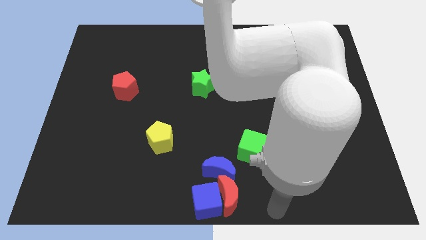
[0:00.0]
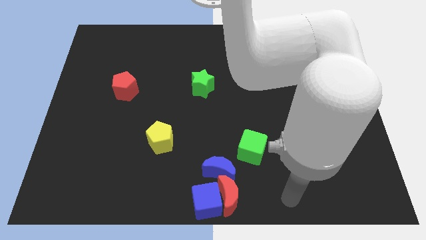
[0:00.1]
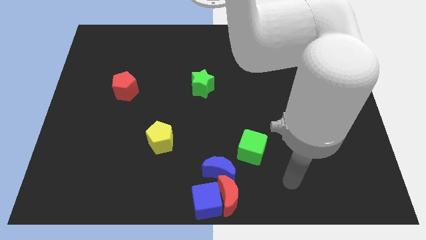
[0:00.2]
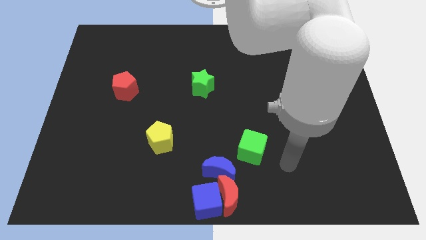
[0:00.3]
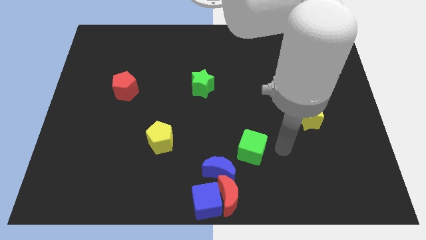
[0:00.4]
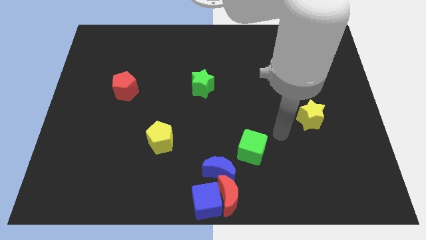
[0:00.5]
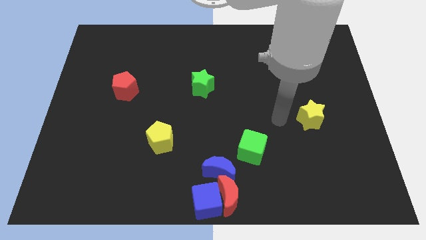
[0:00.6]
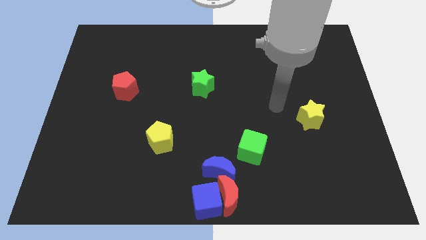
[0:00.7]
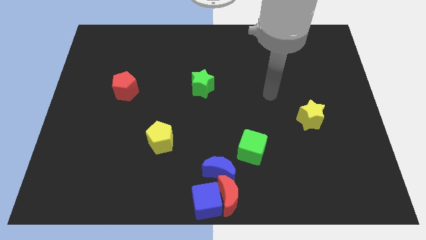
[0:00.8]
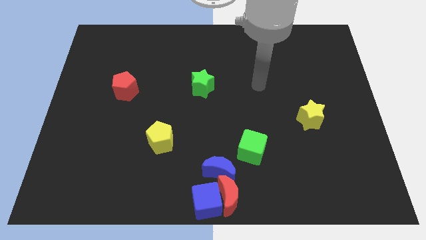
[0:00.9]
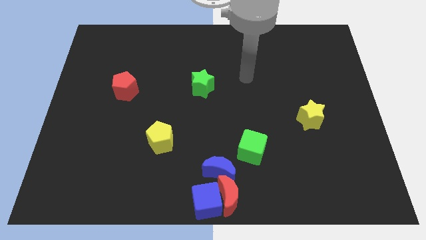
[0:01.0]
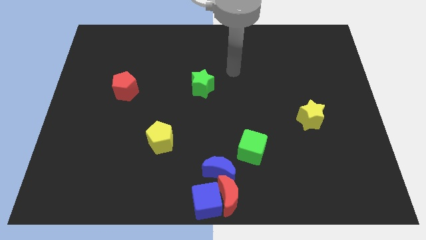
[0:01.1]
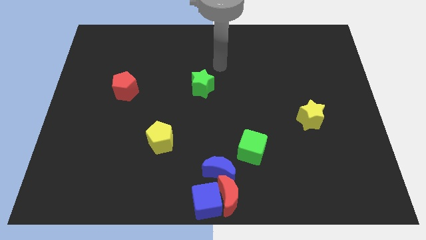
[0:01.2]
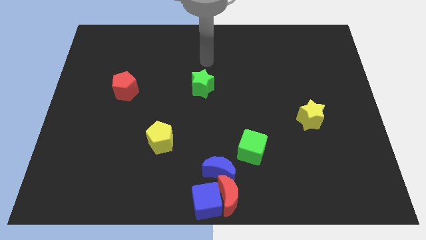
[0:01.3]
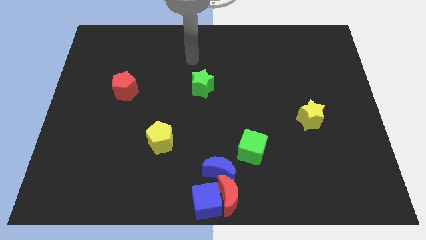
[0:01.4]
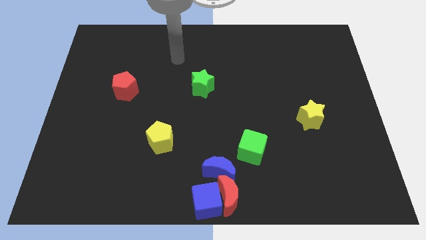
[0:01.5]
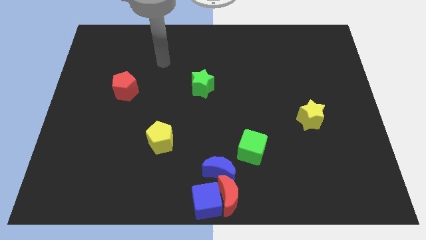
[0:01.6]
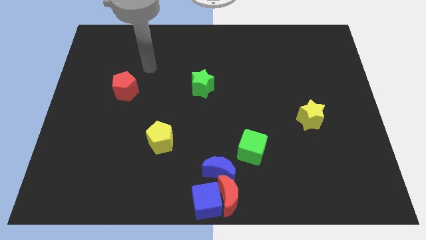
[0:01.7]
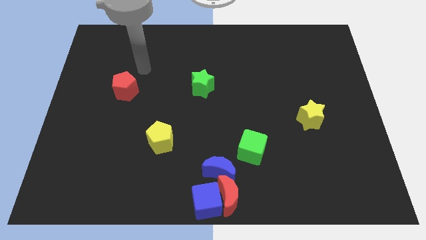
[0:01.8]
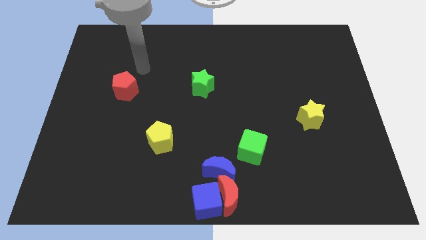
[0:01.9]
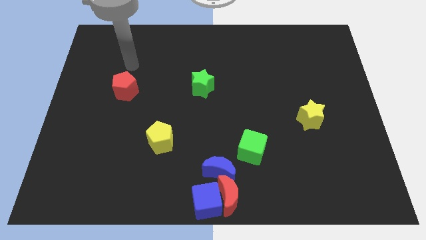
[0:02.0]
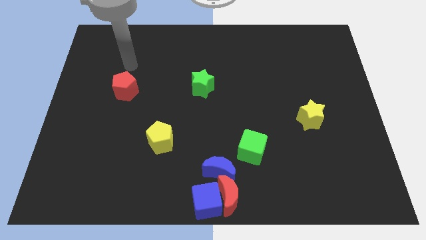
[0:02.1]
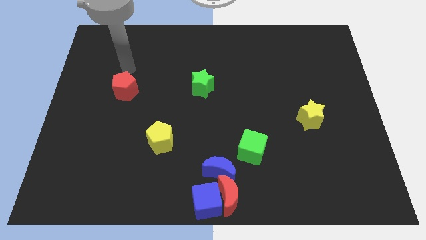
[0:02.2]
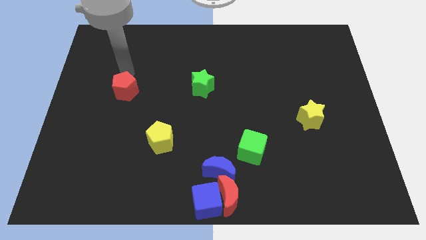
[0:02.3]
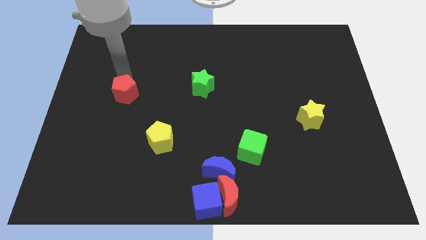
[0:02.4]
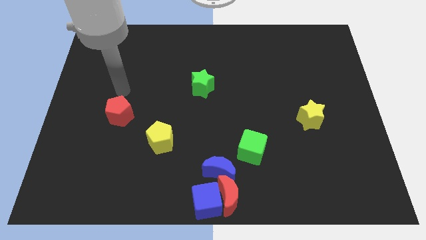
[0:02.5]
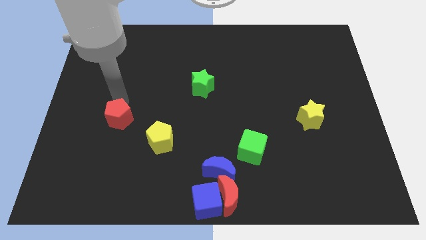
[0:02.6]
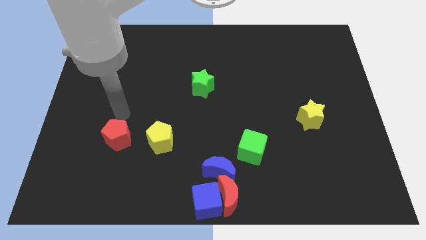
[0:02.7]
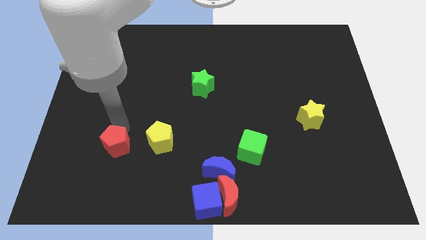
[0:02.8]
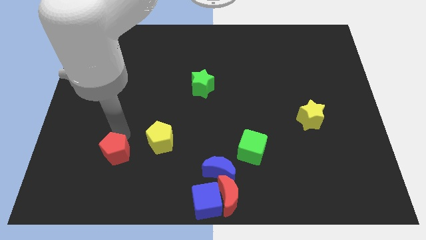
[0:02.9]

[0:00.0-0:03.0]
place the red pentagon at the left side of the yellow pentagon

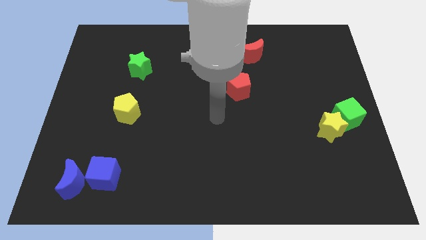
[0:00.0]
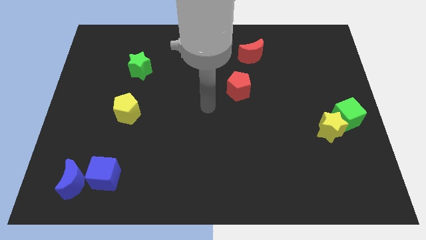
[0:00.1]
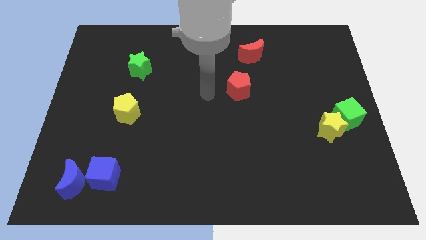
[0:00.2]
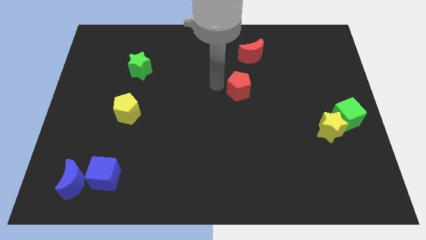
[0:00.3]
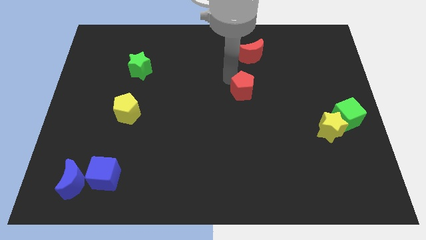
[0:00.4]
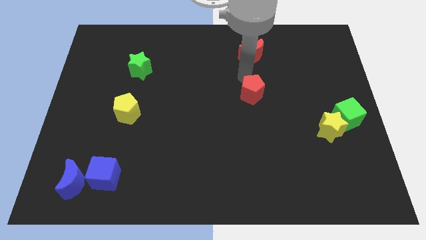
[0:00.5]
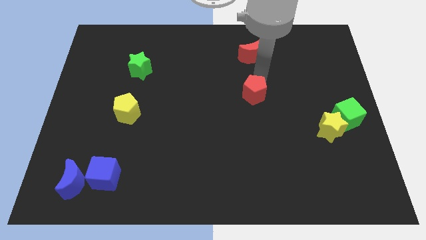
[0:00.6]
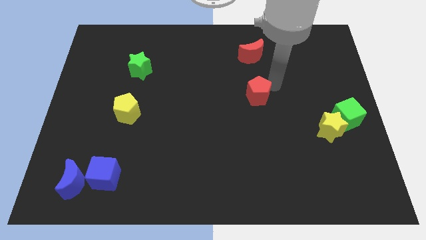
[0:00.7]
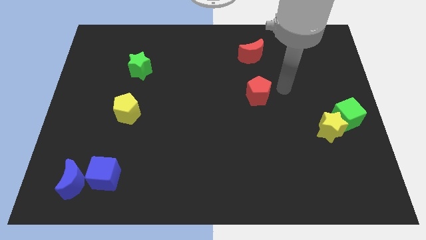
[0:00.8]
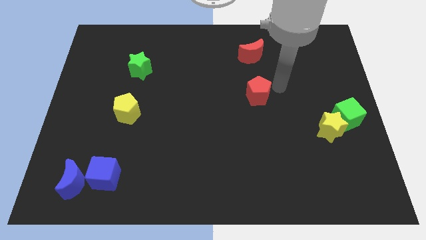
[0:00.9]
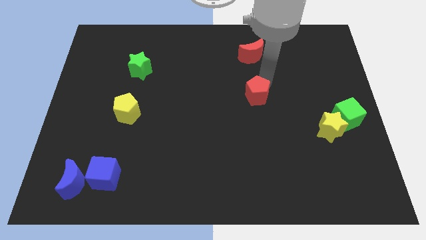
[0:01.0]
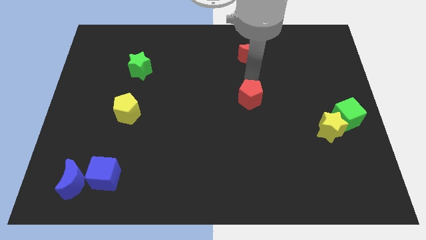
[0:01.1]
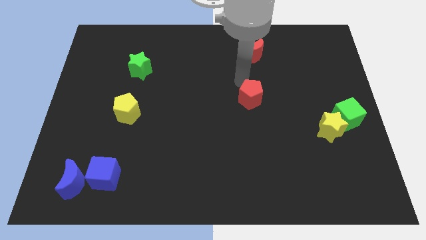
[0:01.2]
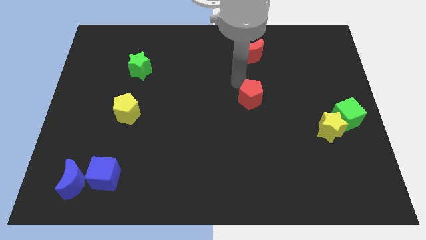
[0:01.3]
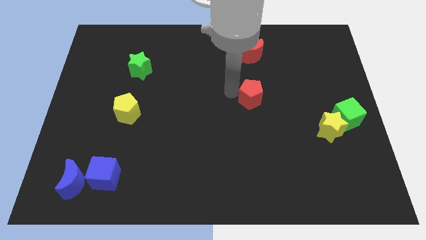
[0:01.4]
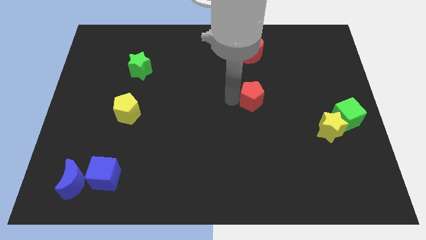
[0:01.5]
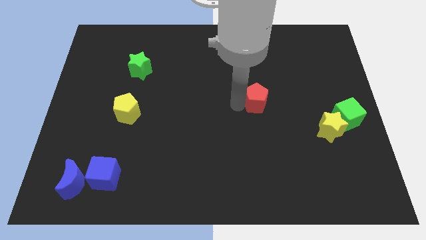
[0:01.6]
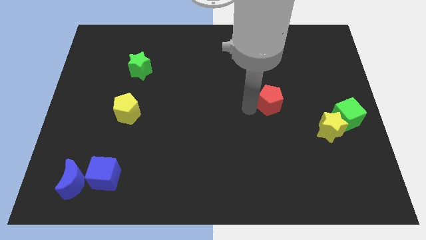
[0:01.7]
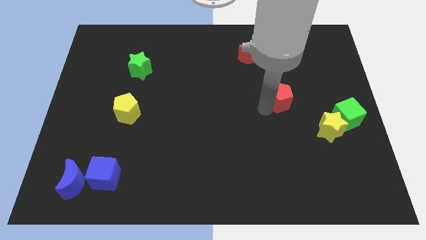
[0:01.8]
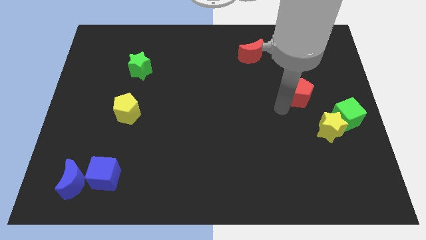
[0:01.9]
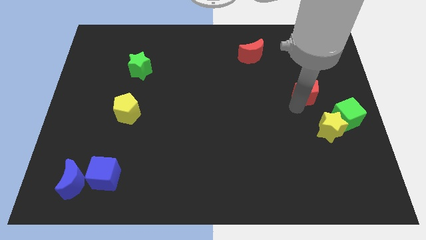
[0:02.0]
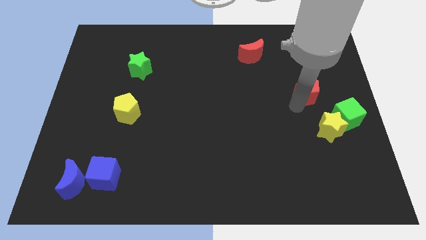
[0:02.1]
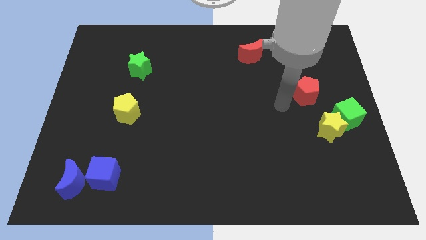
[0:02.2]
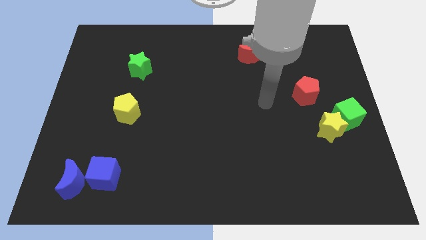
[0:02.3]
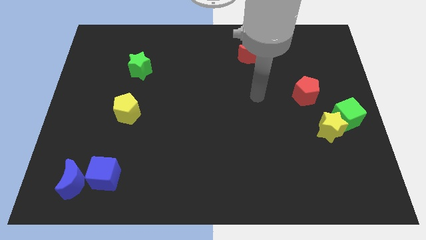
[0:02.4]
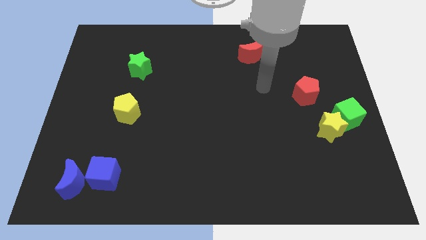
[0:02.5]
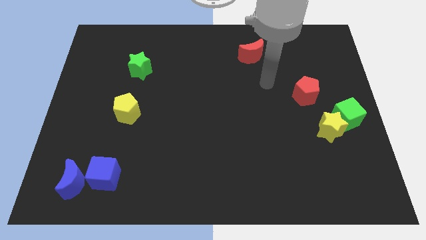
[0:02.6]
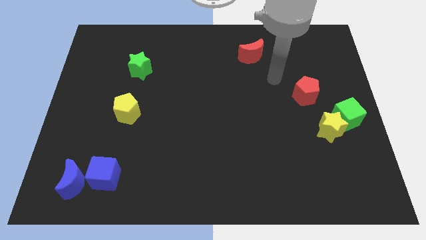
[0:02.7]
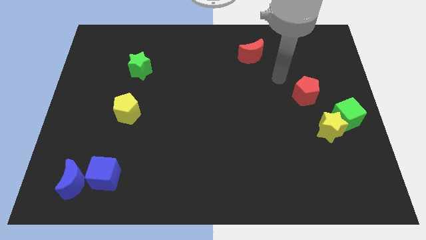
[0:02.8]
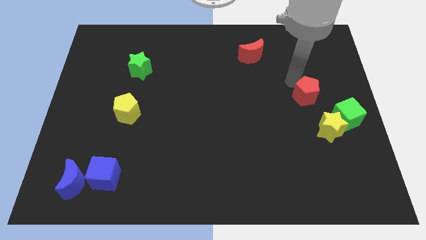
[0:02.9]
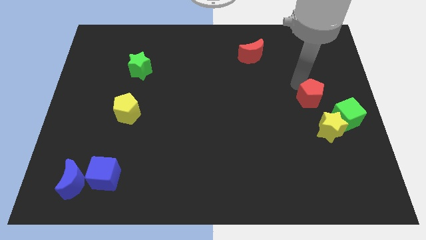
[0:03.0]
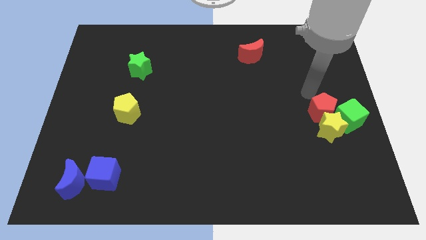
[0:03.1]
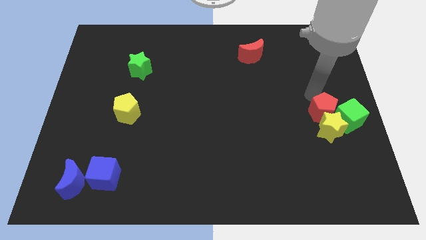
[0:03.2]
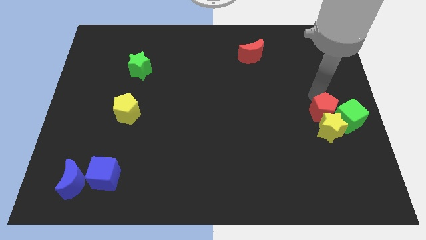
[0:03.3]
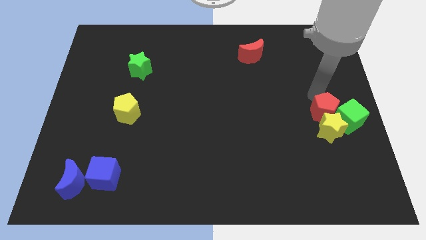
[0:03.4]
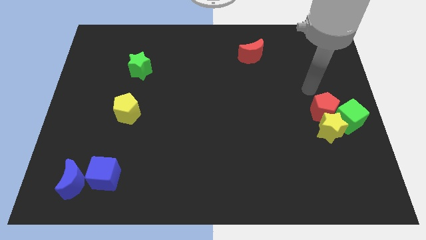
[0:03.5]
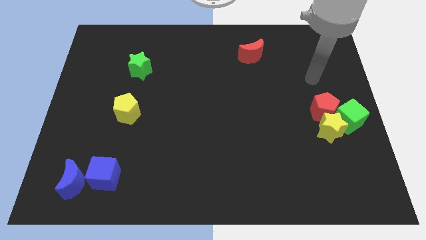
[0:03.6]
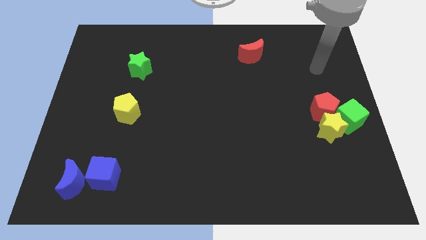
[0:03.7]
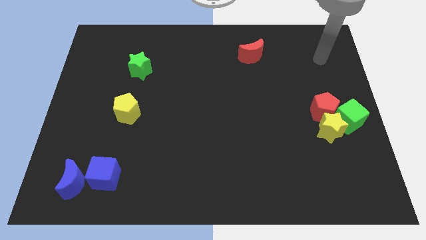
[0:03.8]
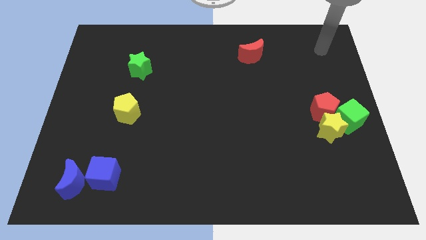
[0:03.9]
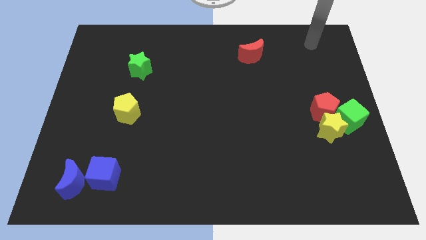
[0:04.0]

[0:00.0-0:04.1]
place the red pentagon on top of the yellow stargreen cube

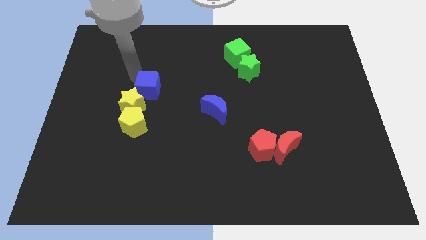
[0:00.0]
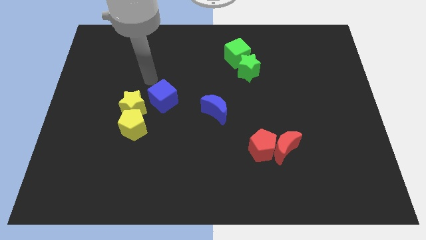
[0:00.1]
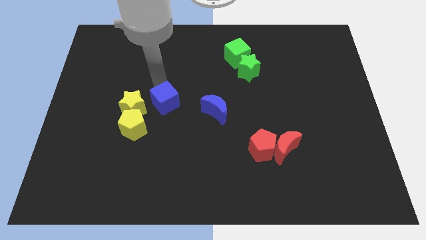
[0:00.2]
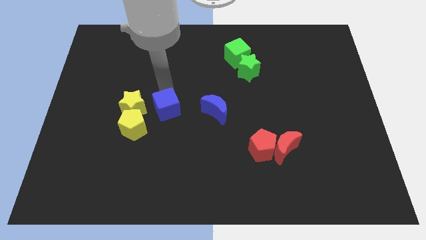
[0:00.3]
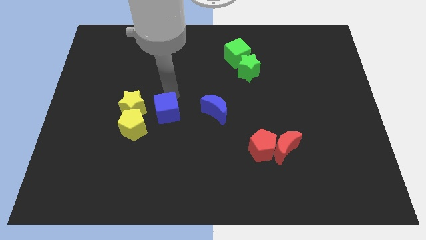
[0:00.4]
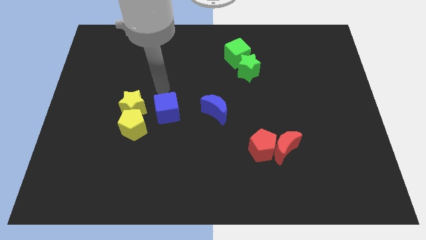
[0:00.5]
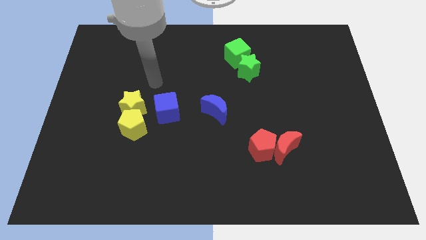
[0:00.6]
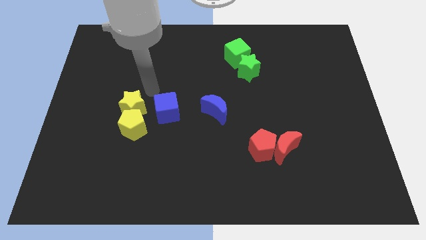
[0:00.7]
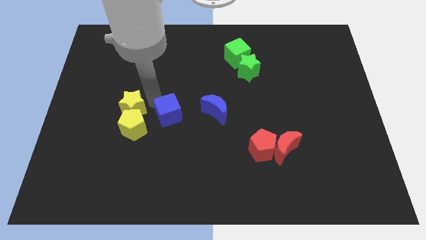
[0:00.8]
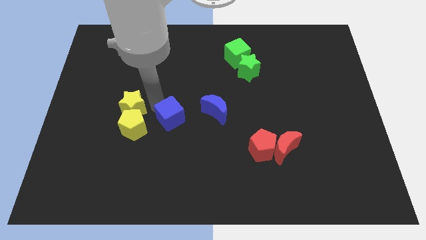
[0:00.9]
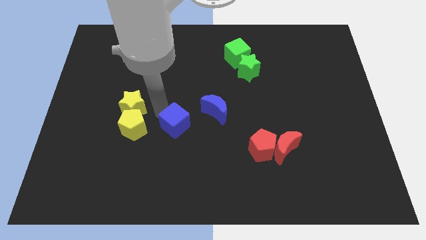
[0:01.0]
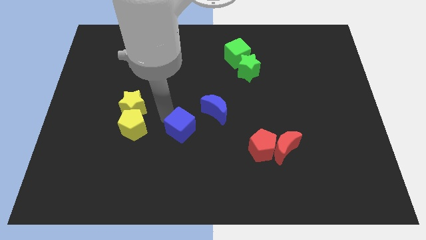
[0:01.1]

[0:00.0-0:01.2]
move the blue cube to the right of the yellow pentagon

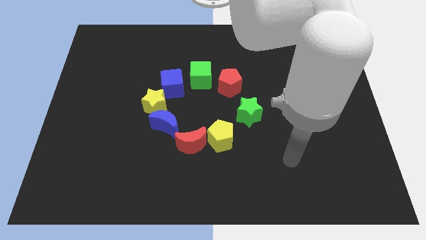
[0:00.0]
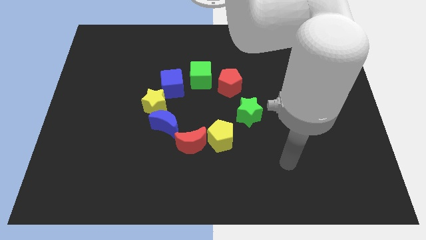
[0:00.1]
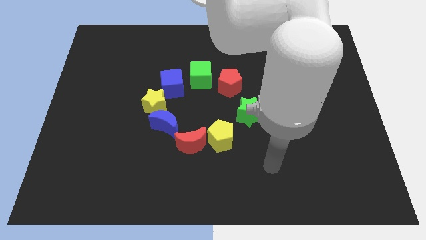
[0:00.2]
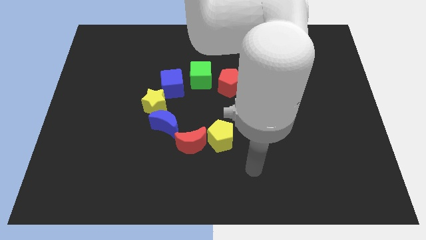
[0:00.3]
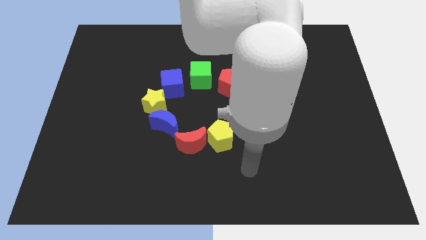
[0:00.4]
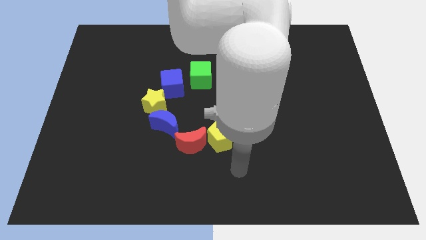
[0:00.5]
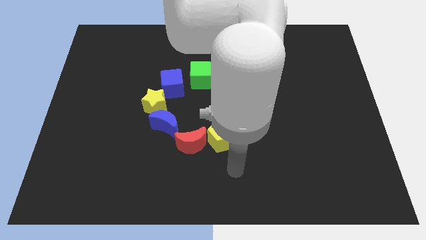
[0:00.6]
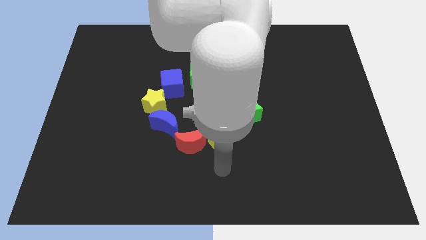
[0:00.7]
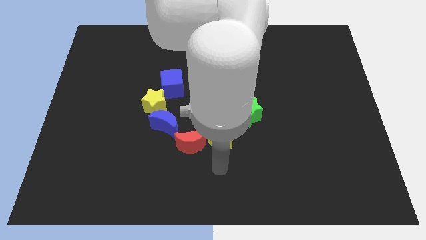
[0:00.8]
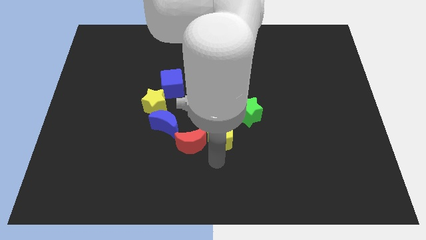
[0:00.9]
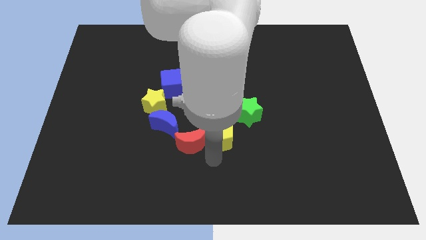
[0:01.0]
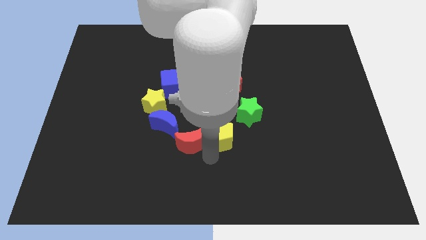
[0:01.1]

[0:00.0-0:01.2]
move the arm towards the bottom of the yellow pentagon
